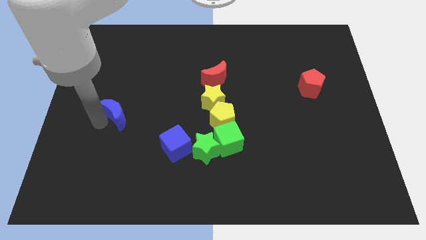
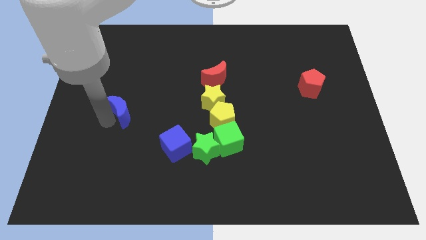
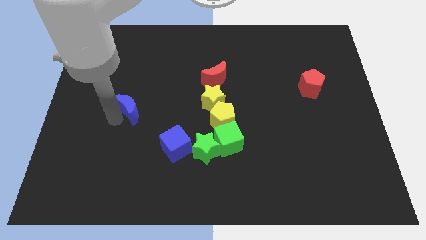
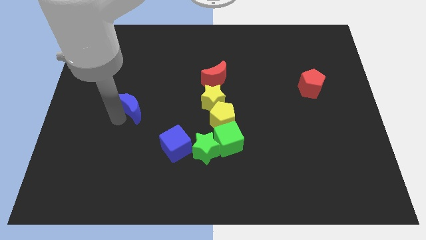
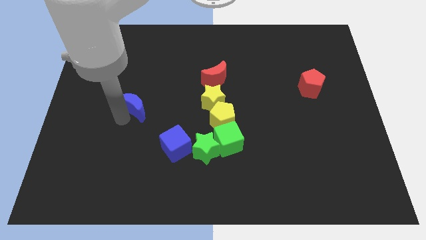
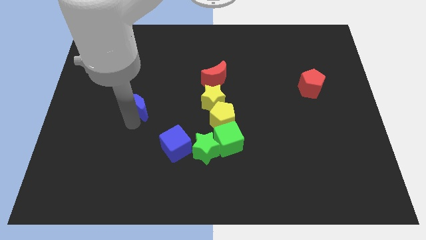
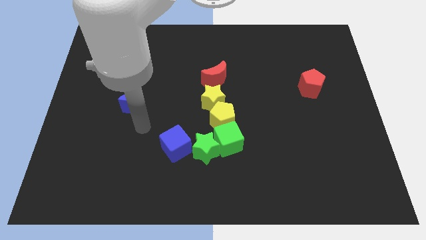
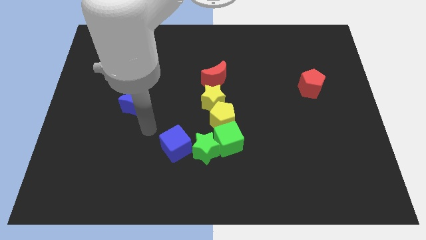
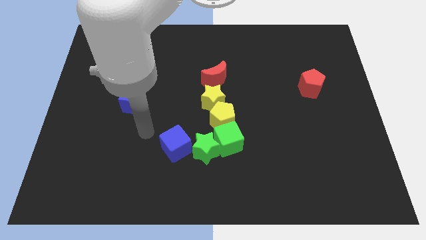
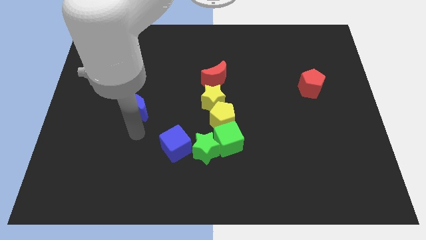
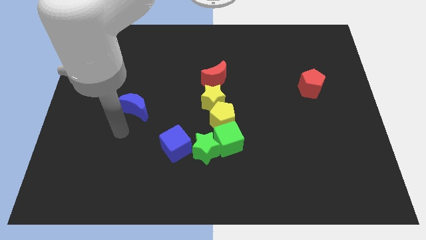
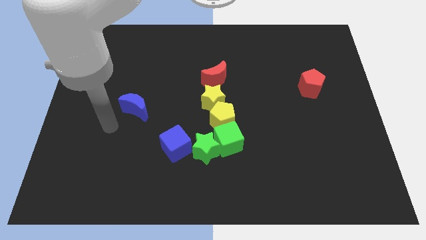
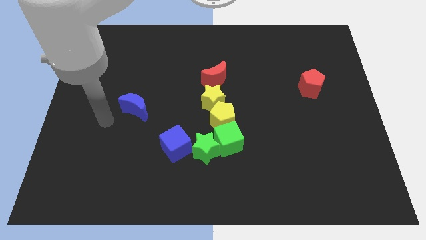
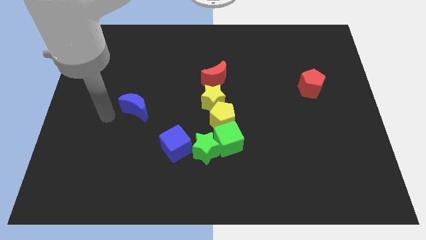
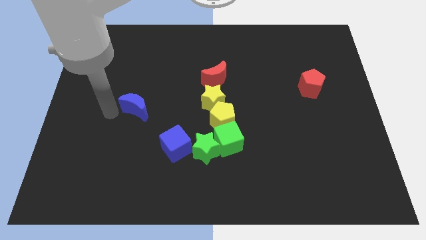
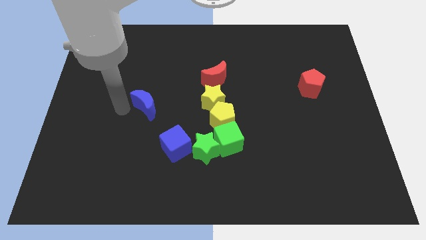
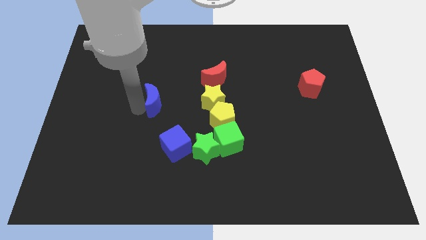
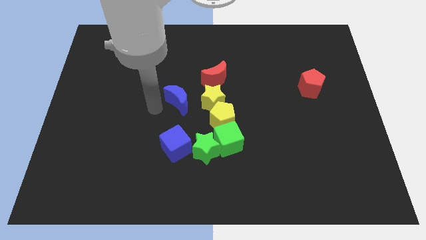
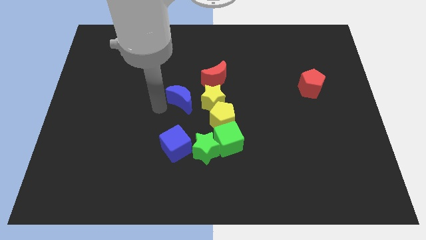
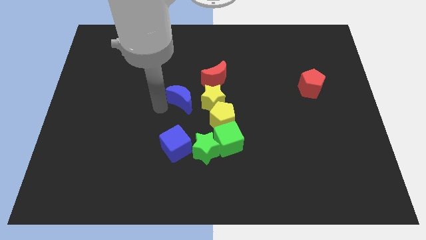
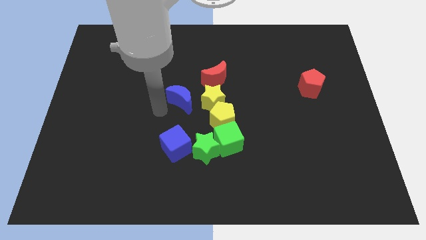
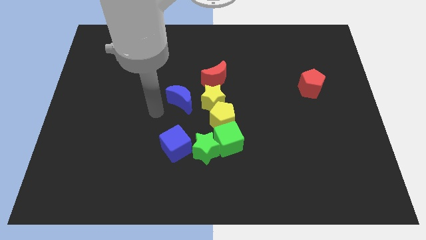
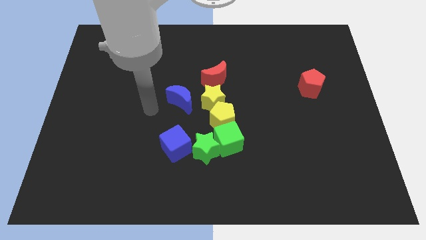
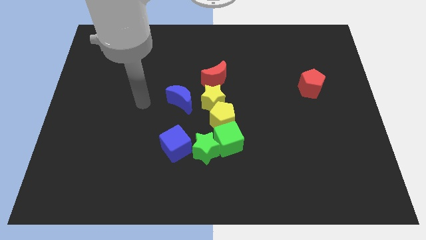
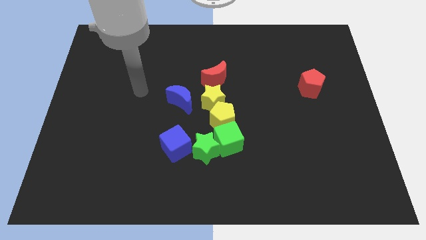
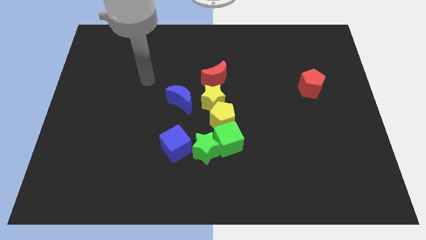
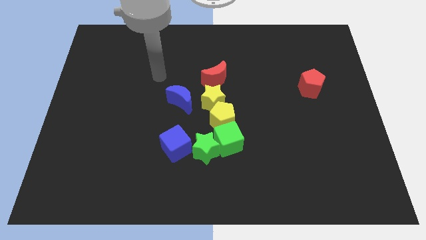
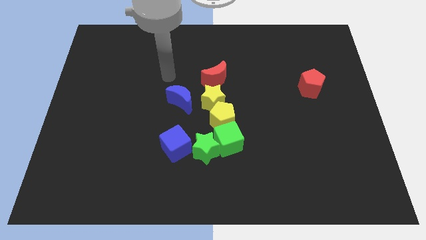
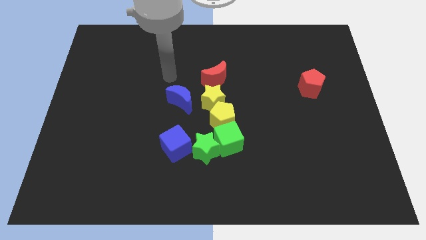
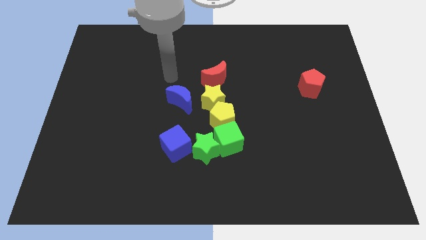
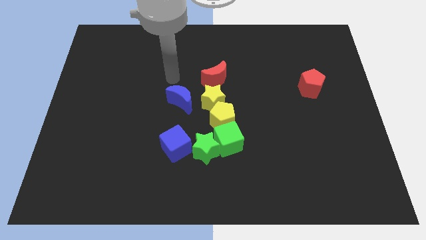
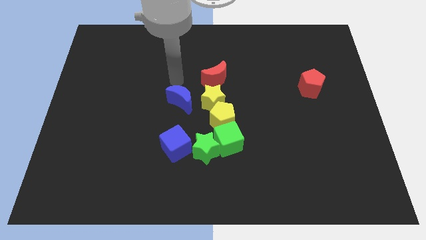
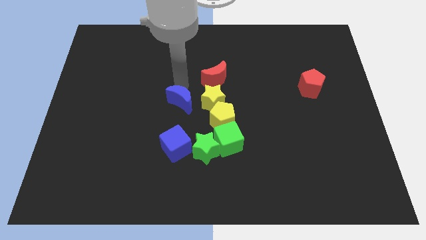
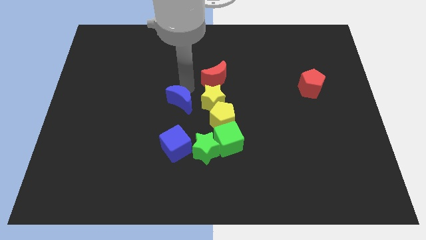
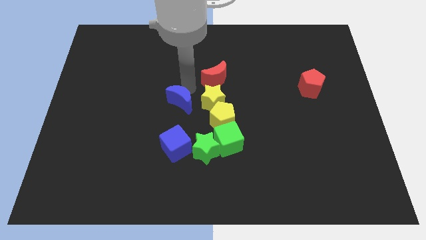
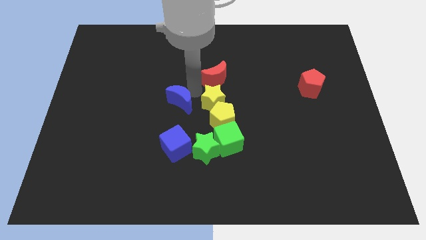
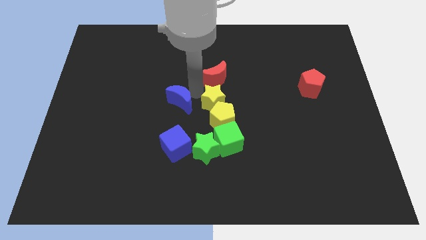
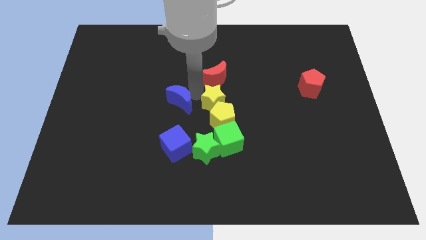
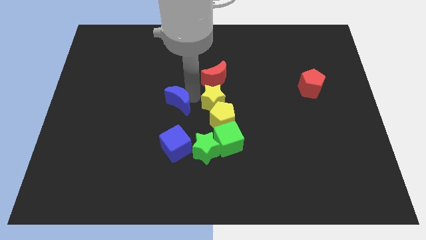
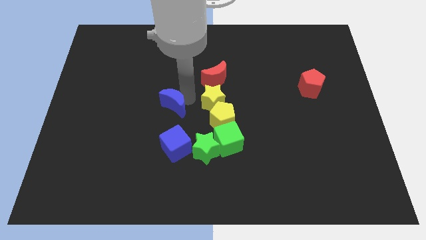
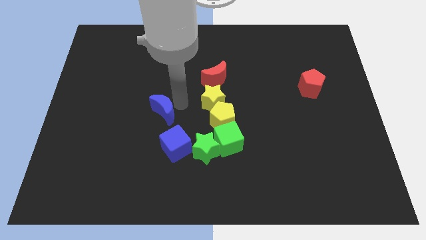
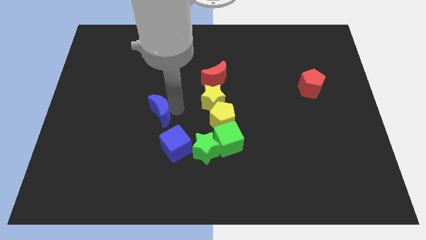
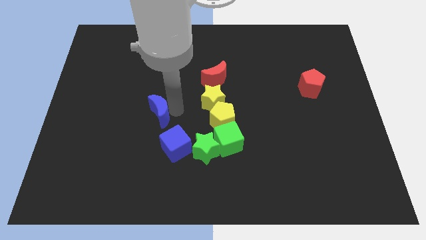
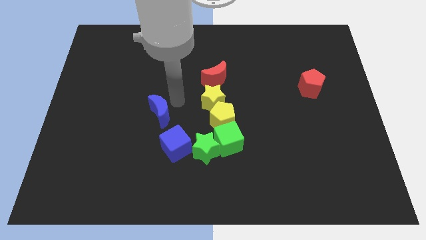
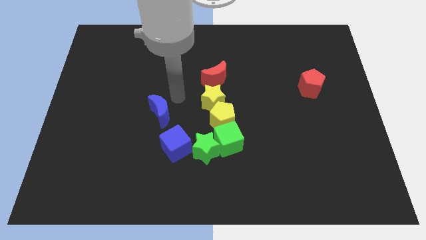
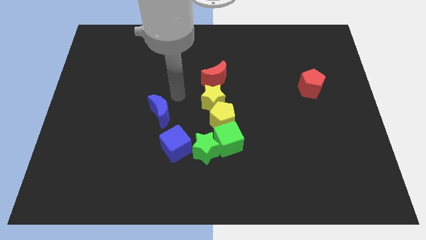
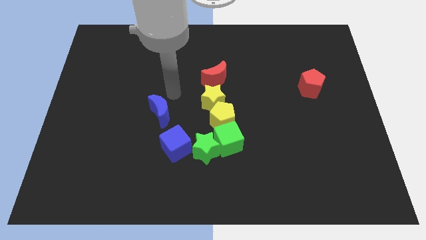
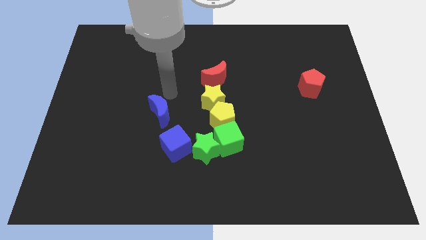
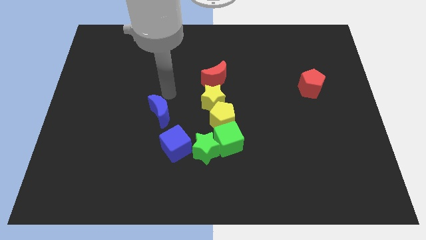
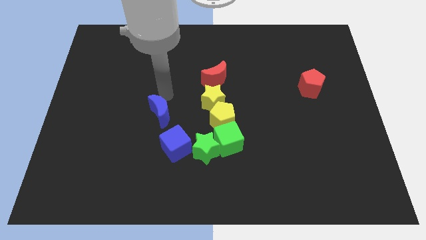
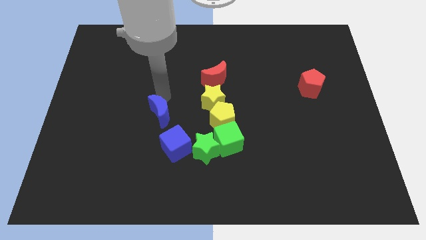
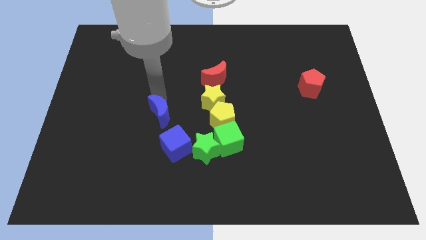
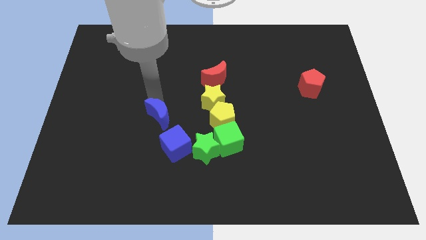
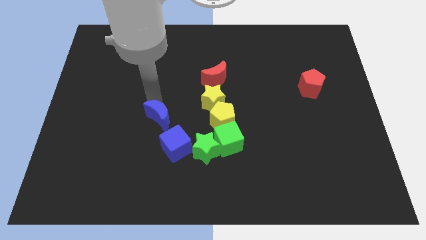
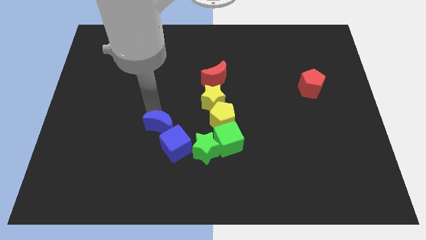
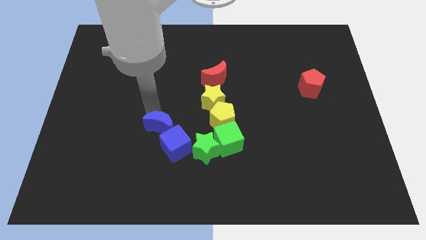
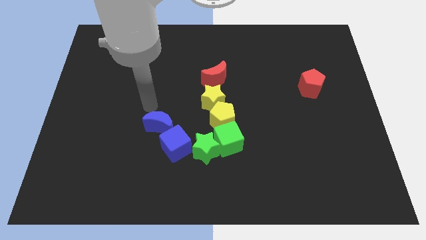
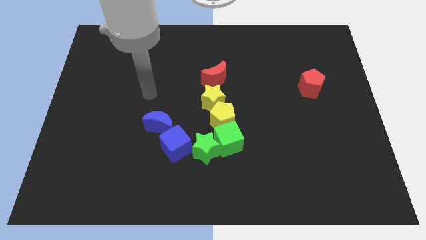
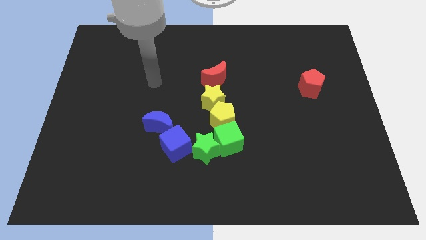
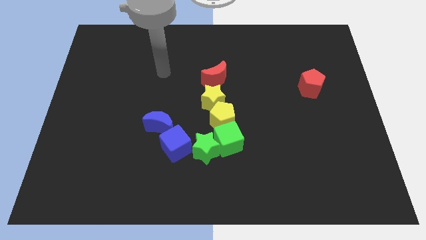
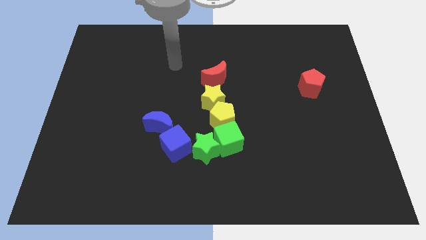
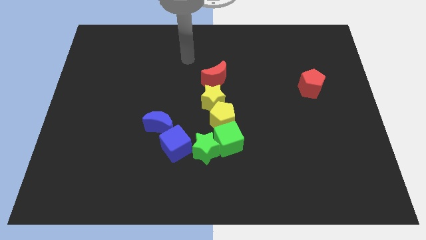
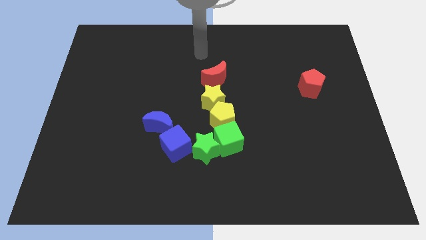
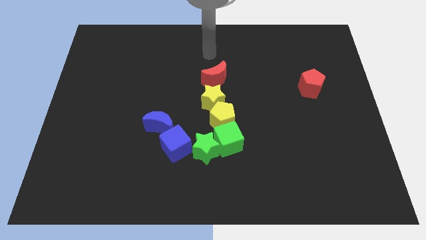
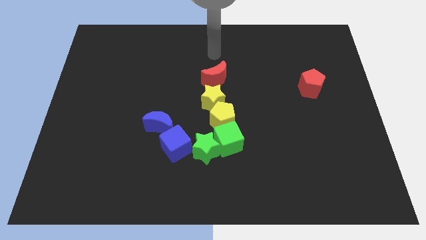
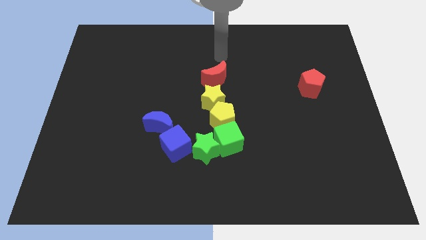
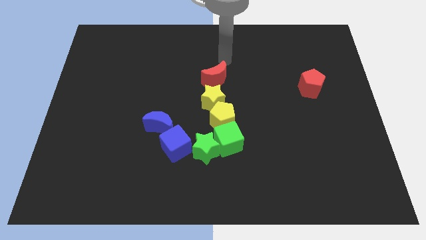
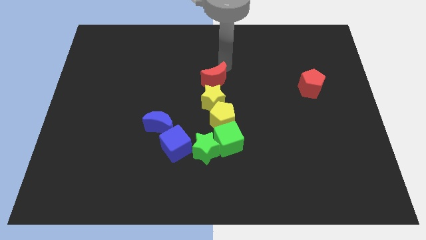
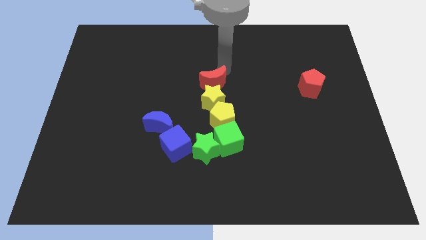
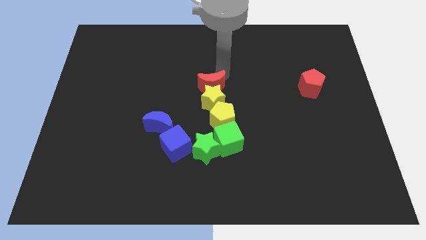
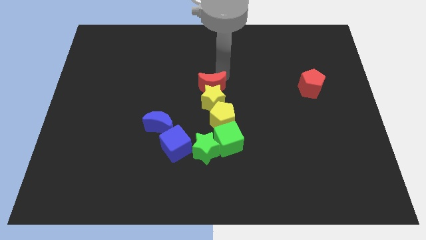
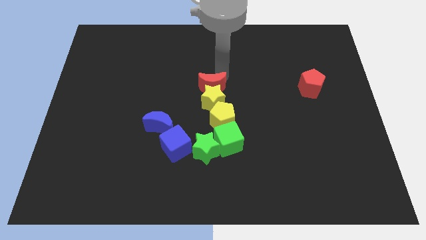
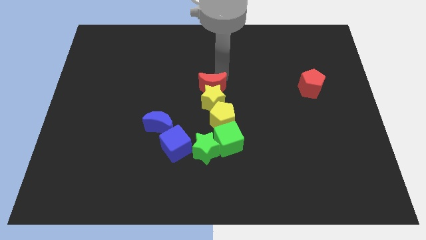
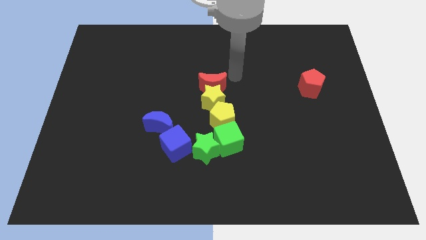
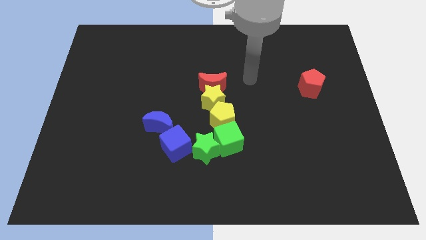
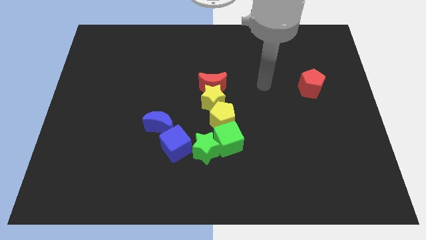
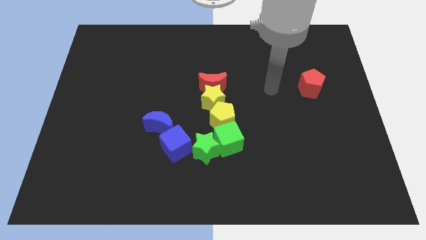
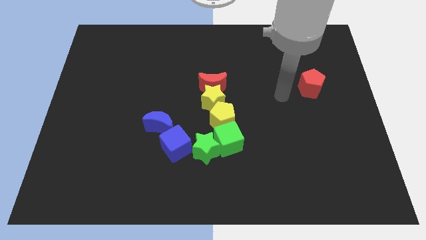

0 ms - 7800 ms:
move the blue crescent above the blue cube

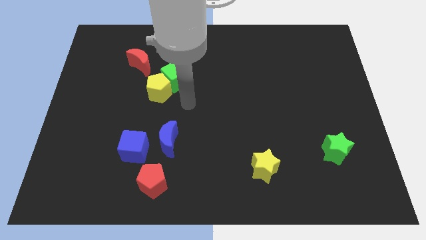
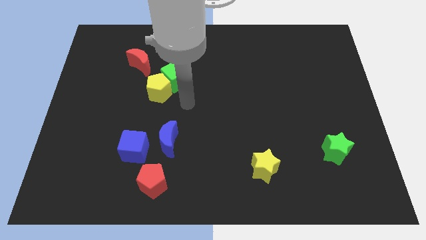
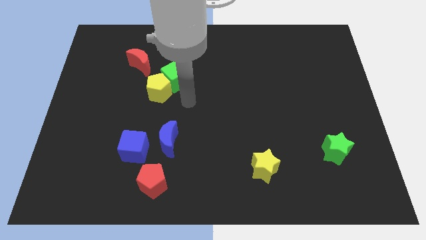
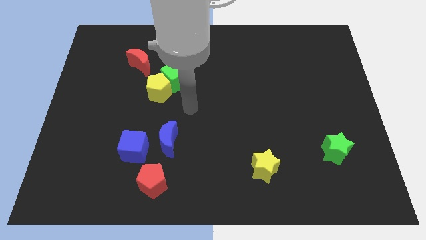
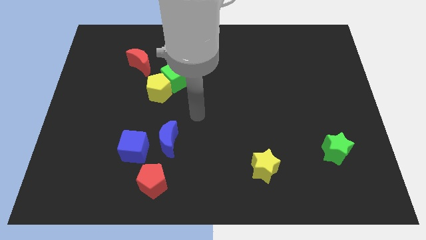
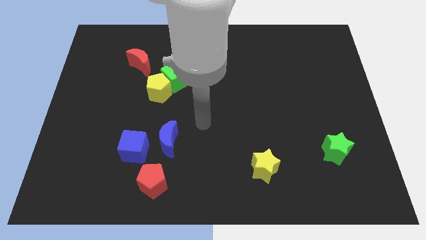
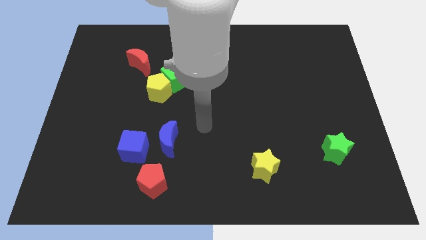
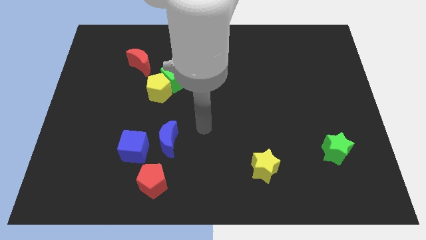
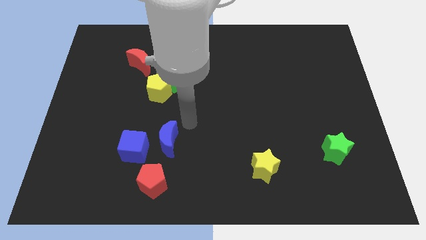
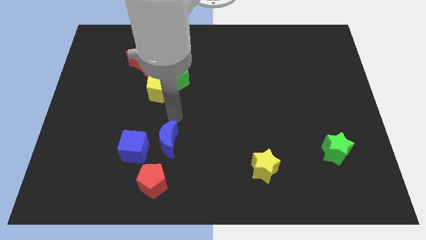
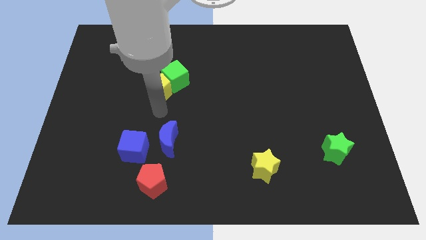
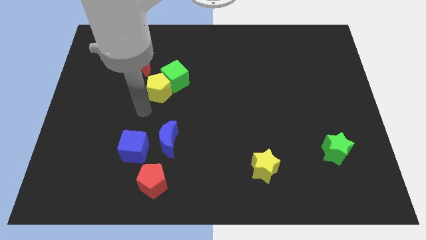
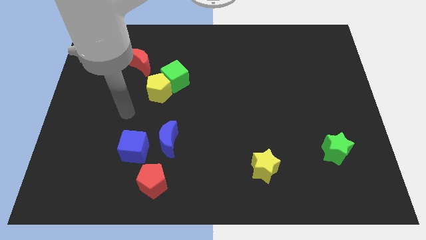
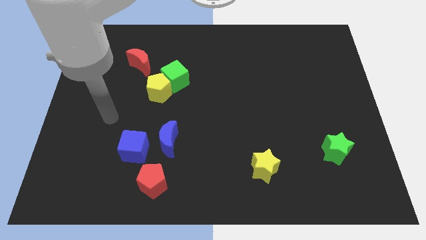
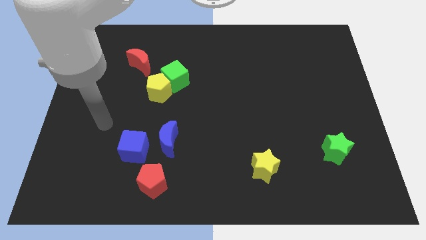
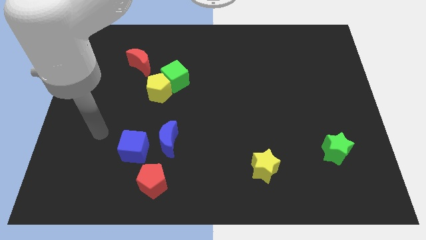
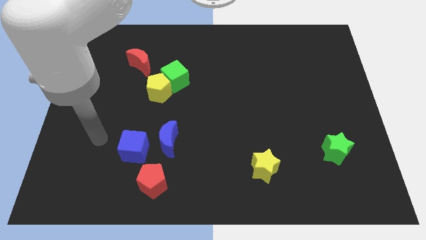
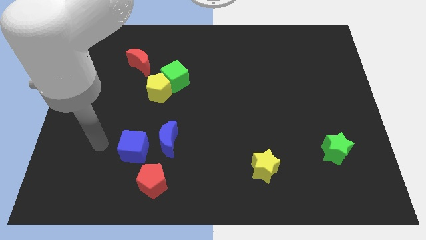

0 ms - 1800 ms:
point the arm to the left of the blue cube
